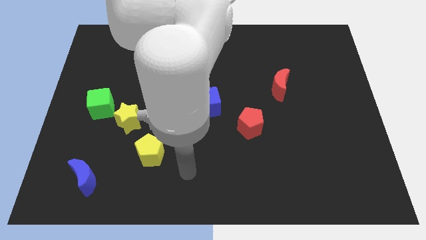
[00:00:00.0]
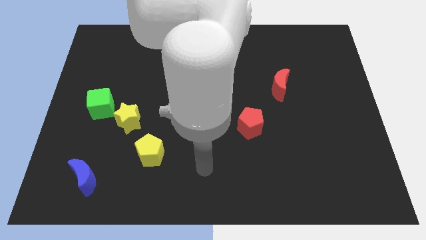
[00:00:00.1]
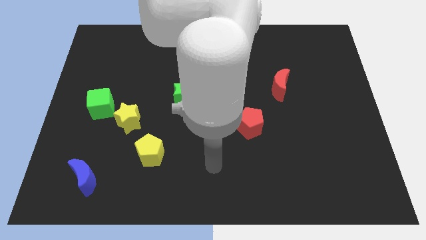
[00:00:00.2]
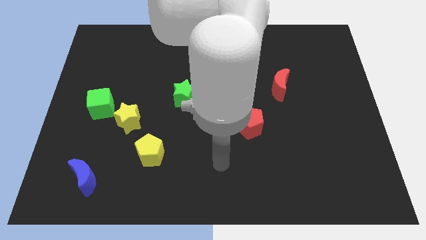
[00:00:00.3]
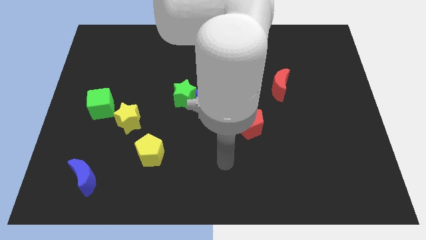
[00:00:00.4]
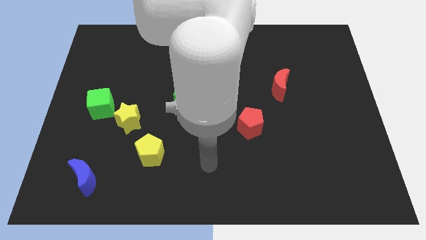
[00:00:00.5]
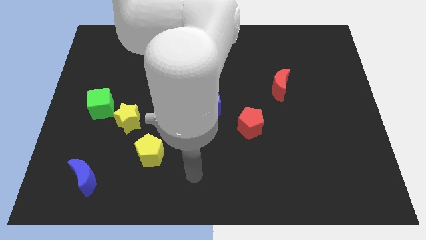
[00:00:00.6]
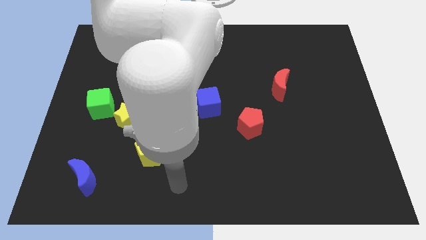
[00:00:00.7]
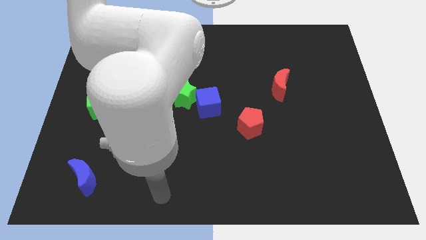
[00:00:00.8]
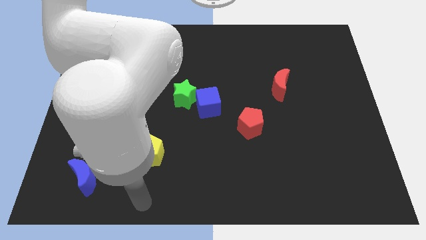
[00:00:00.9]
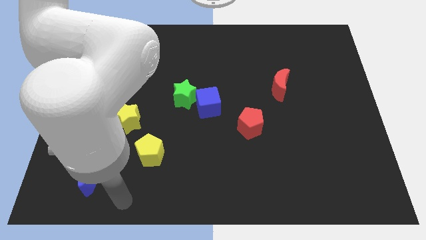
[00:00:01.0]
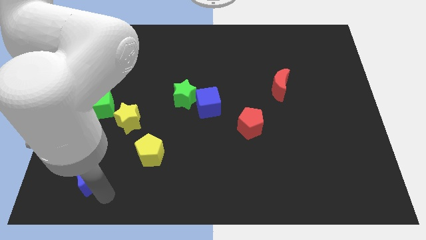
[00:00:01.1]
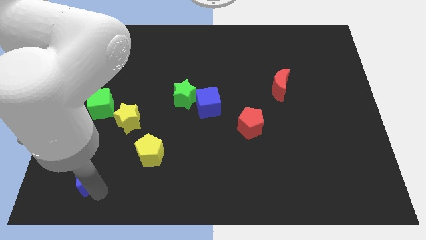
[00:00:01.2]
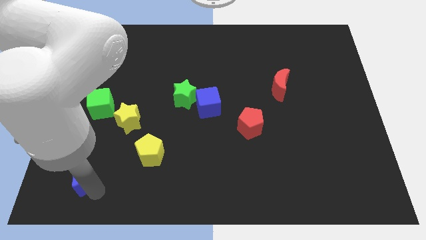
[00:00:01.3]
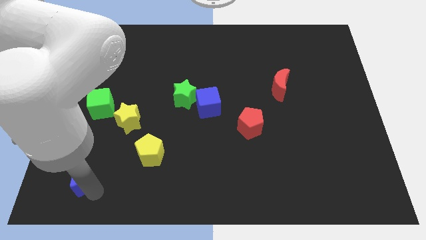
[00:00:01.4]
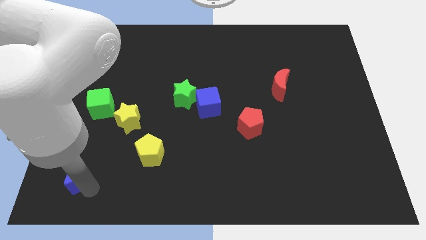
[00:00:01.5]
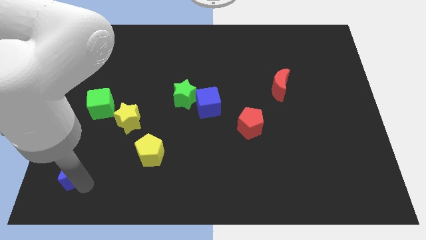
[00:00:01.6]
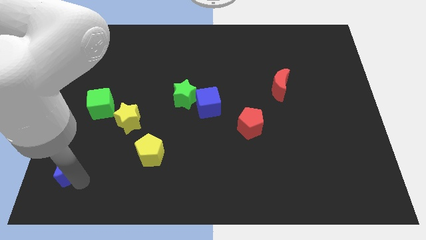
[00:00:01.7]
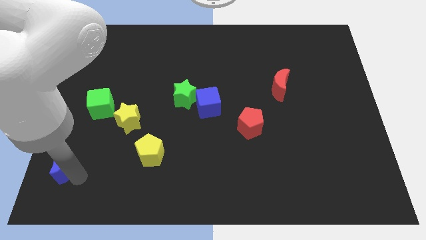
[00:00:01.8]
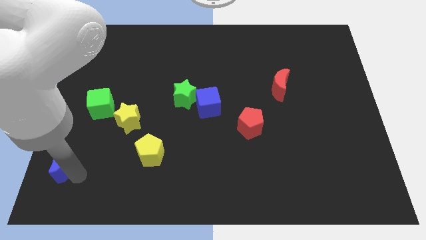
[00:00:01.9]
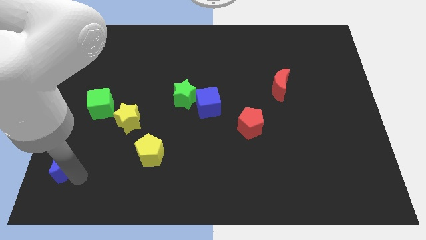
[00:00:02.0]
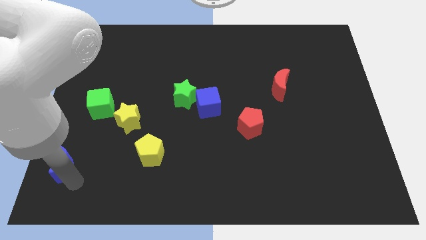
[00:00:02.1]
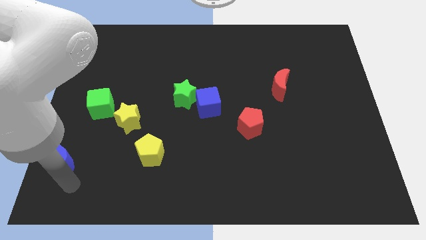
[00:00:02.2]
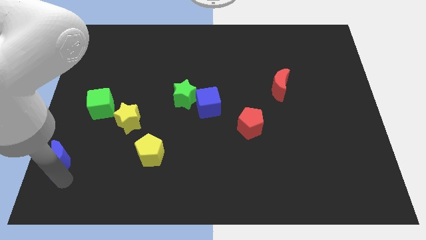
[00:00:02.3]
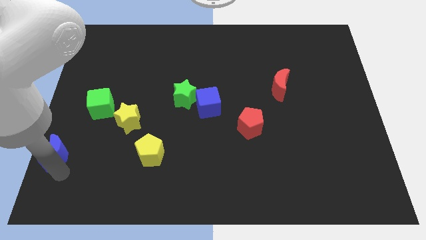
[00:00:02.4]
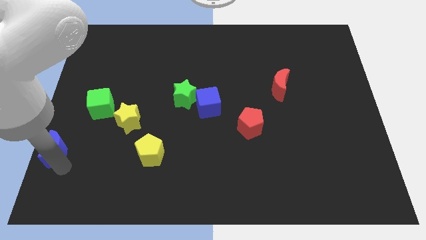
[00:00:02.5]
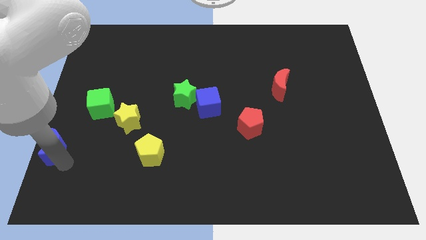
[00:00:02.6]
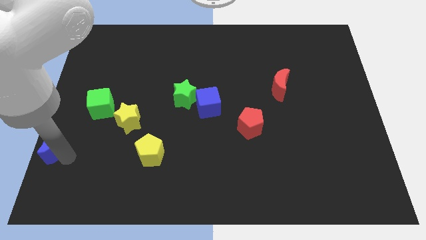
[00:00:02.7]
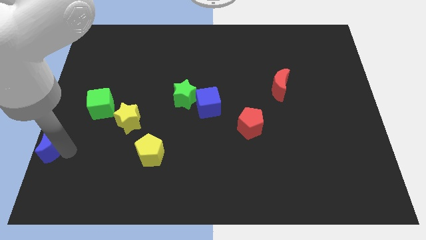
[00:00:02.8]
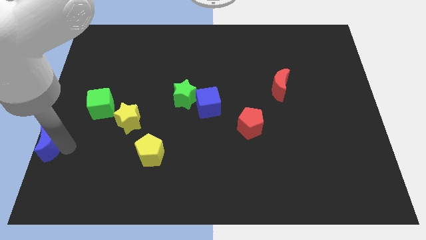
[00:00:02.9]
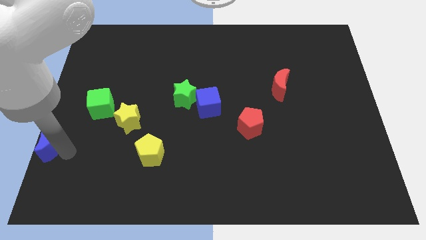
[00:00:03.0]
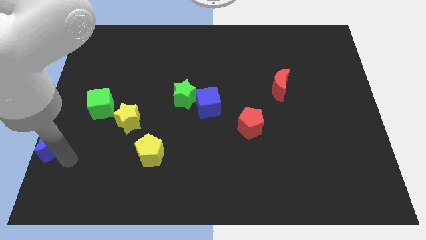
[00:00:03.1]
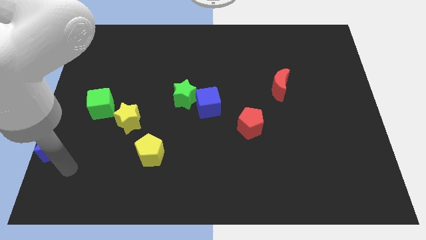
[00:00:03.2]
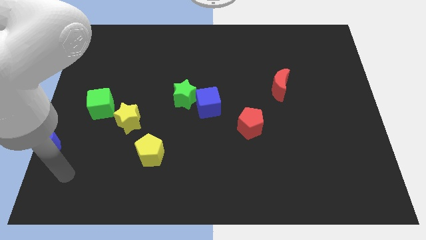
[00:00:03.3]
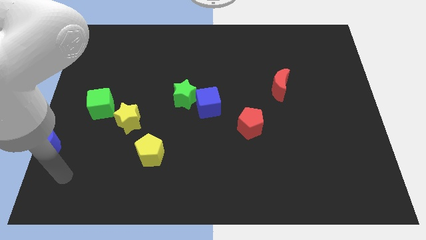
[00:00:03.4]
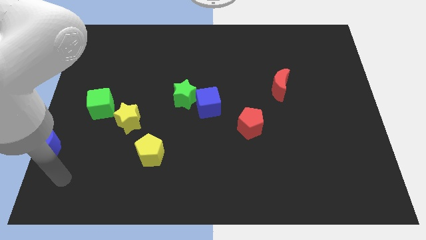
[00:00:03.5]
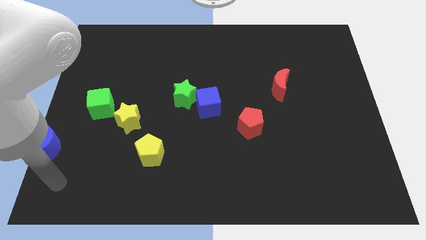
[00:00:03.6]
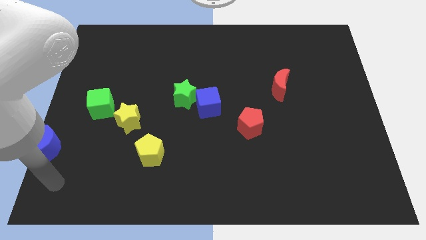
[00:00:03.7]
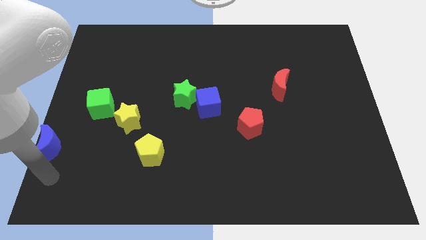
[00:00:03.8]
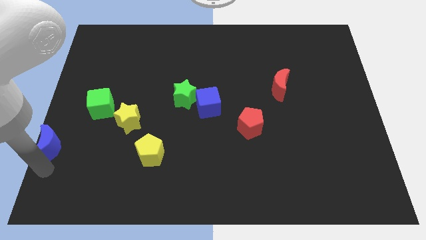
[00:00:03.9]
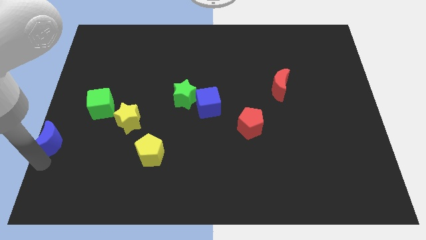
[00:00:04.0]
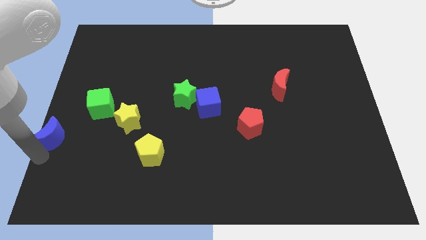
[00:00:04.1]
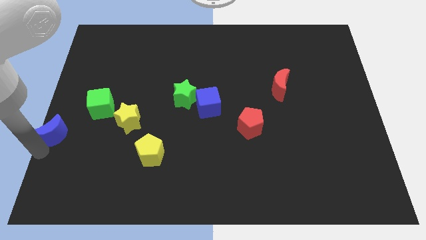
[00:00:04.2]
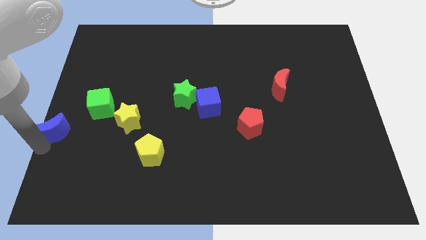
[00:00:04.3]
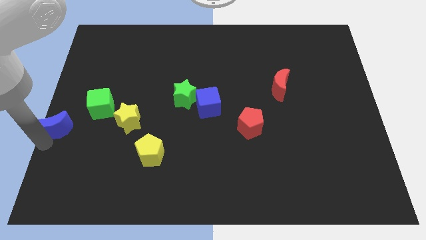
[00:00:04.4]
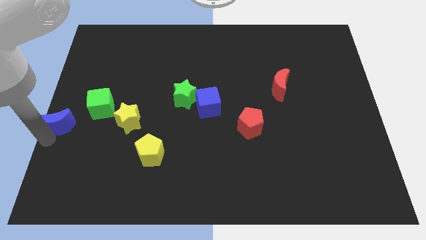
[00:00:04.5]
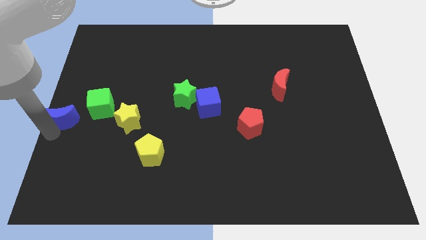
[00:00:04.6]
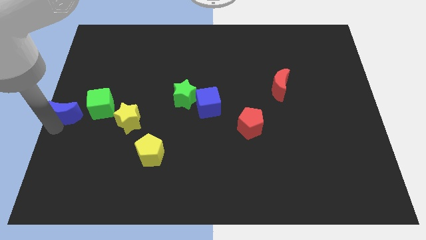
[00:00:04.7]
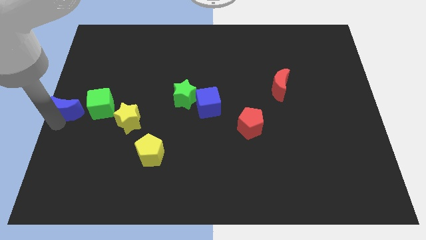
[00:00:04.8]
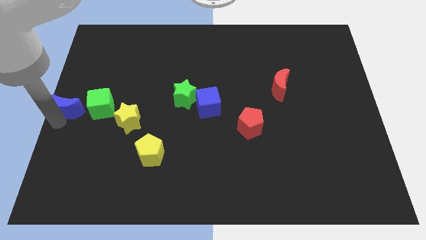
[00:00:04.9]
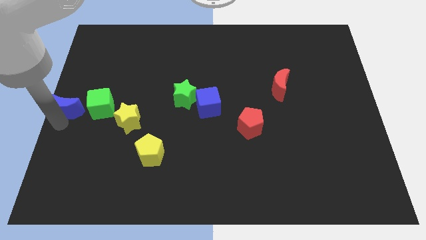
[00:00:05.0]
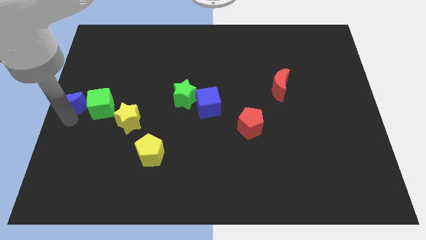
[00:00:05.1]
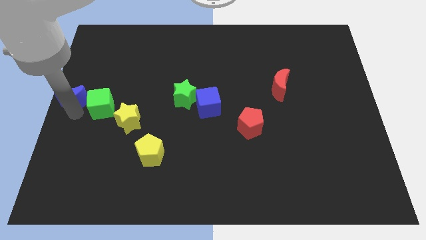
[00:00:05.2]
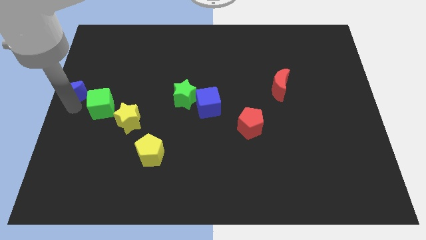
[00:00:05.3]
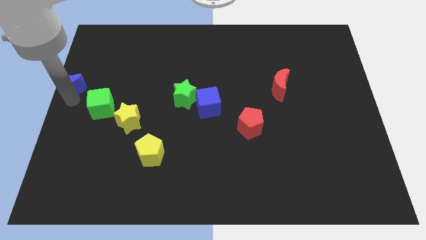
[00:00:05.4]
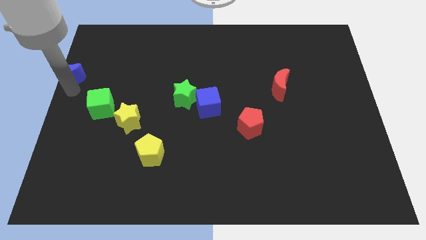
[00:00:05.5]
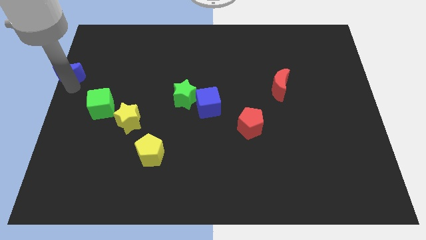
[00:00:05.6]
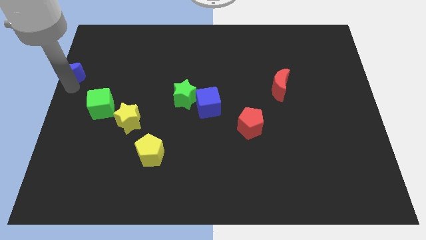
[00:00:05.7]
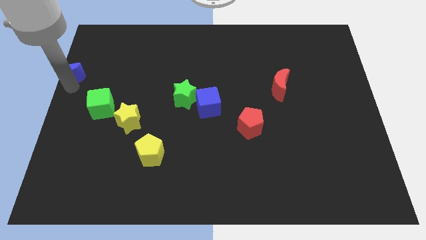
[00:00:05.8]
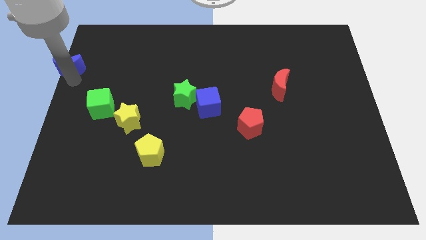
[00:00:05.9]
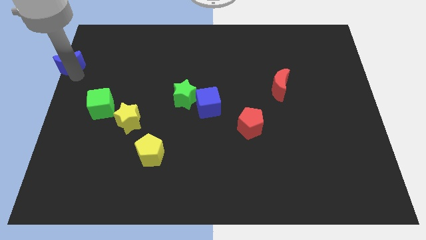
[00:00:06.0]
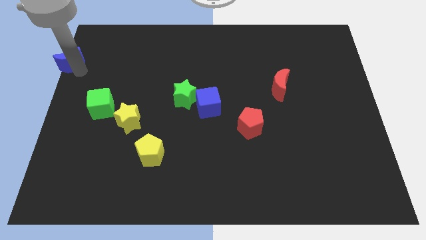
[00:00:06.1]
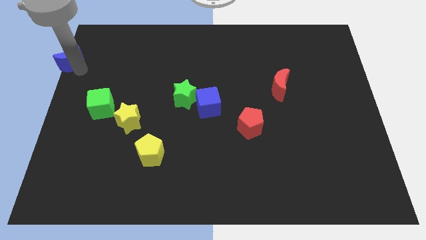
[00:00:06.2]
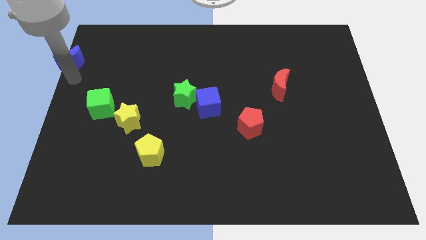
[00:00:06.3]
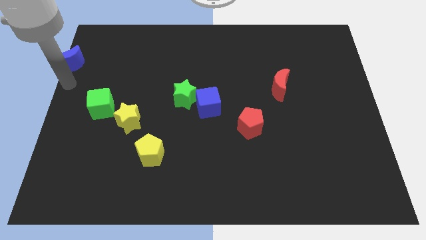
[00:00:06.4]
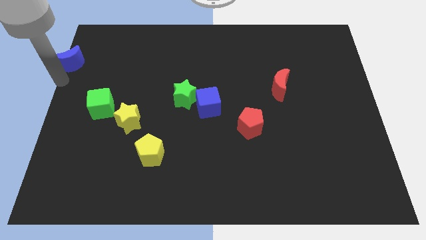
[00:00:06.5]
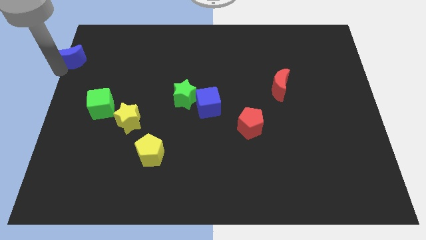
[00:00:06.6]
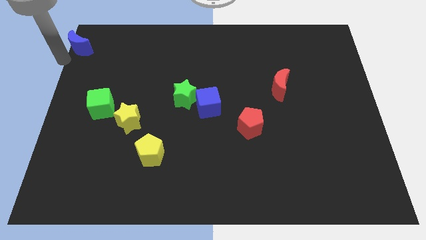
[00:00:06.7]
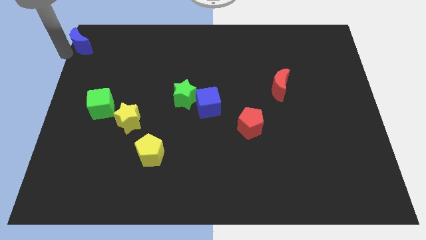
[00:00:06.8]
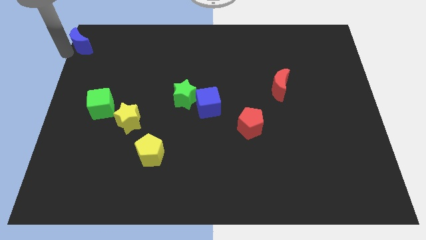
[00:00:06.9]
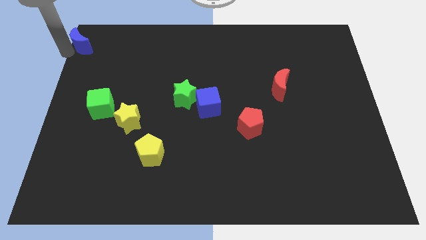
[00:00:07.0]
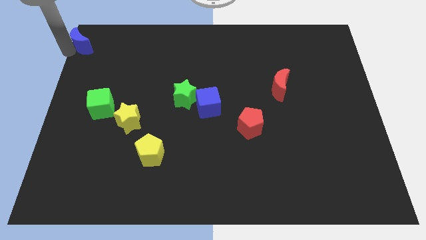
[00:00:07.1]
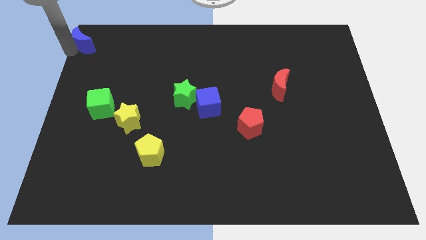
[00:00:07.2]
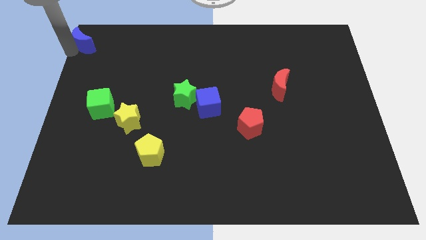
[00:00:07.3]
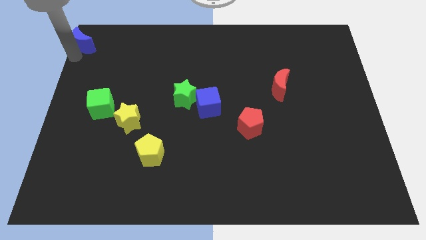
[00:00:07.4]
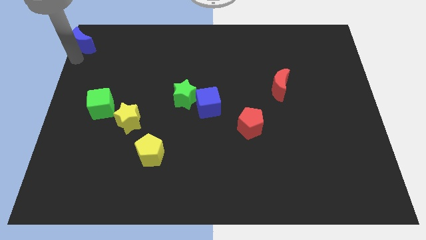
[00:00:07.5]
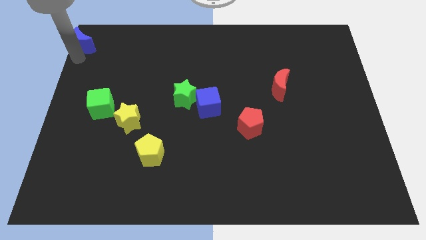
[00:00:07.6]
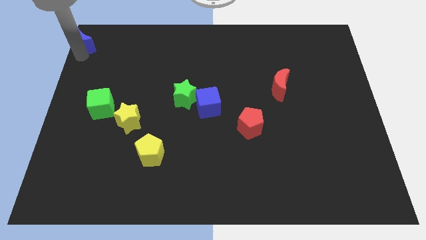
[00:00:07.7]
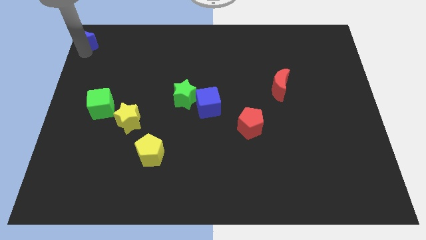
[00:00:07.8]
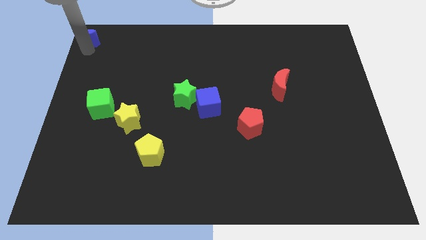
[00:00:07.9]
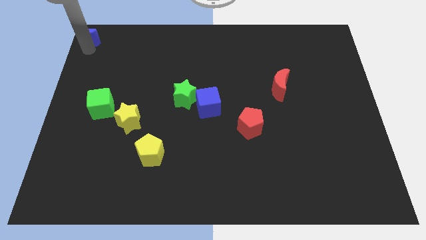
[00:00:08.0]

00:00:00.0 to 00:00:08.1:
place the blue crescent at the top left corner of the board

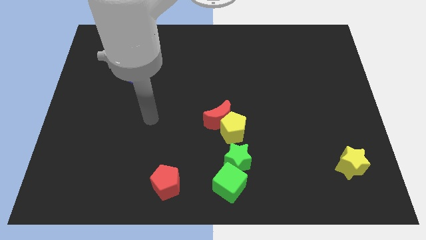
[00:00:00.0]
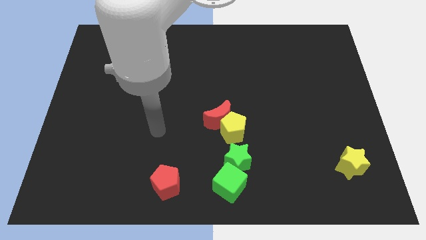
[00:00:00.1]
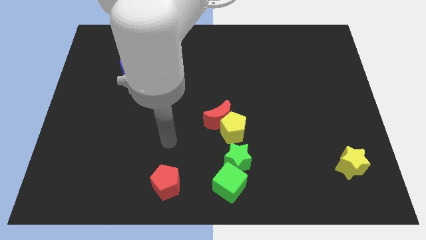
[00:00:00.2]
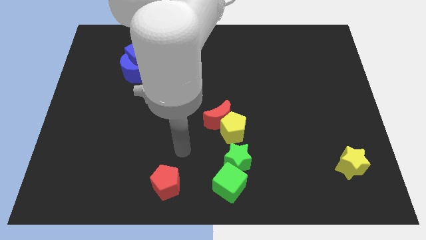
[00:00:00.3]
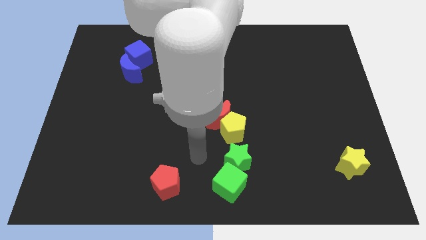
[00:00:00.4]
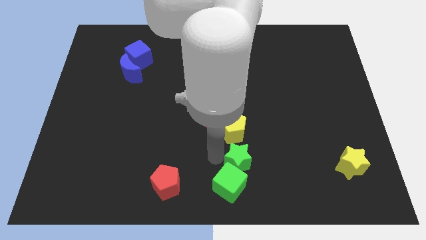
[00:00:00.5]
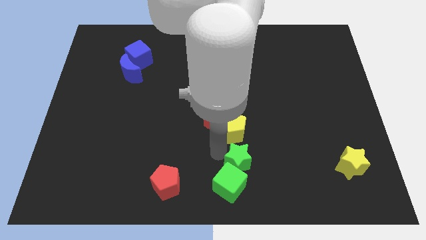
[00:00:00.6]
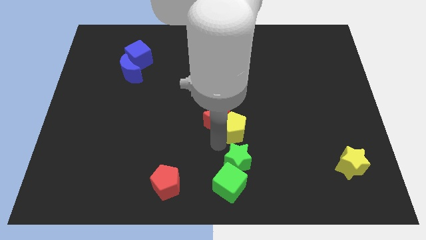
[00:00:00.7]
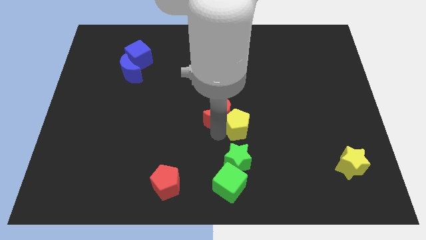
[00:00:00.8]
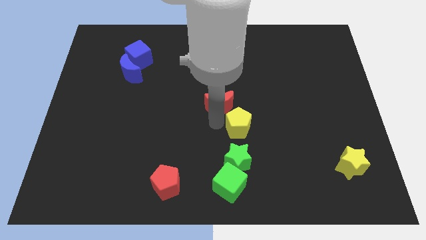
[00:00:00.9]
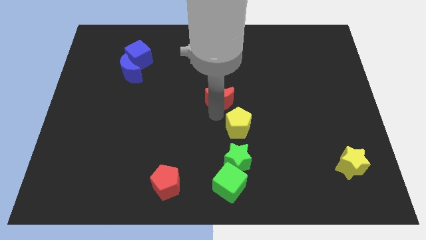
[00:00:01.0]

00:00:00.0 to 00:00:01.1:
slightly push the red crescent to top side
